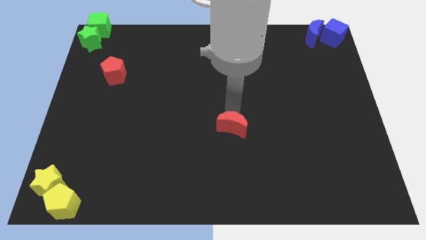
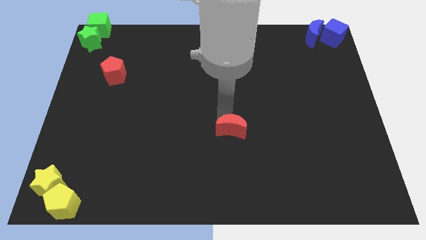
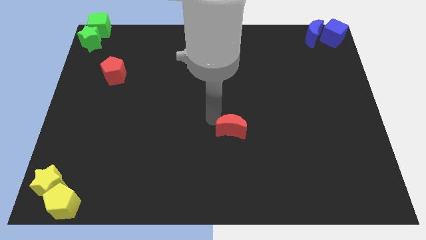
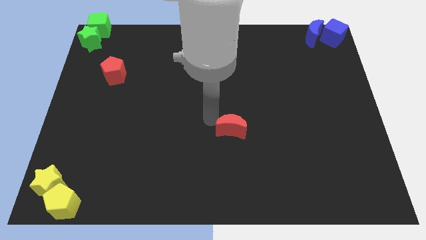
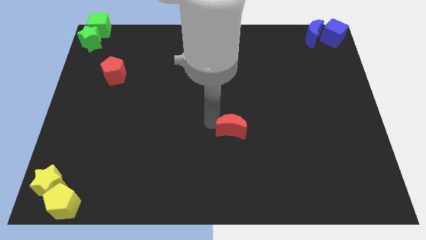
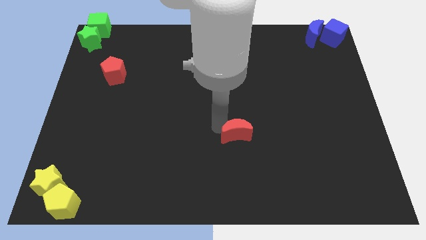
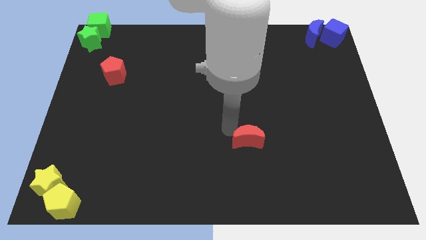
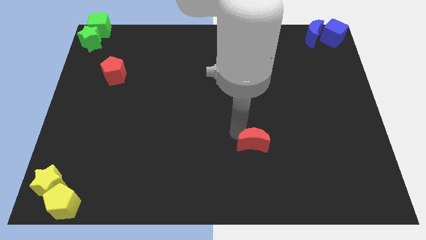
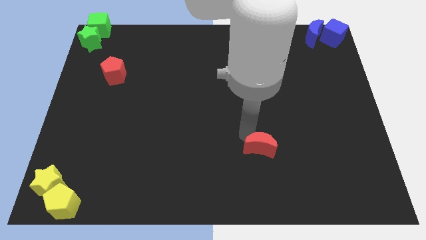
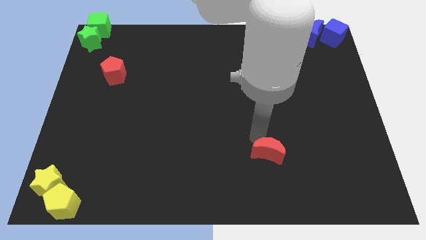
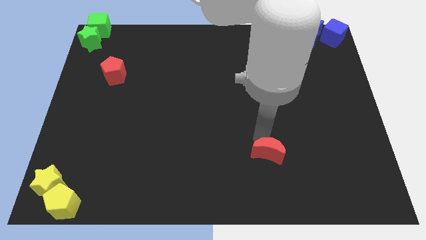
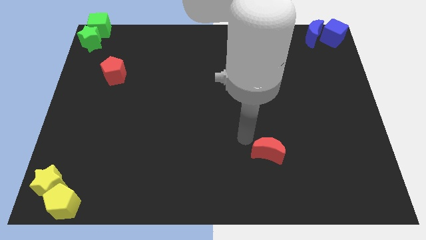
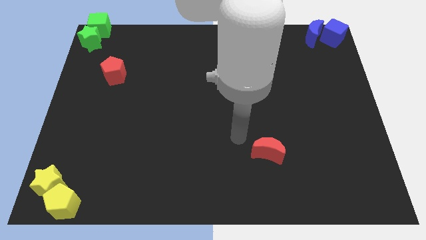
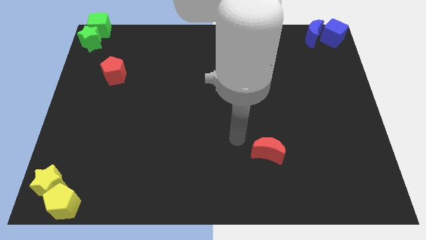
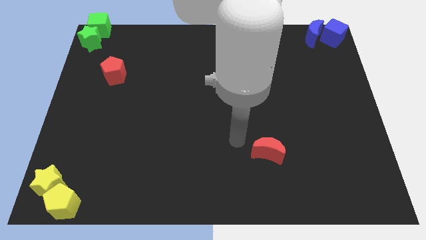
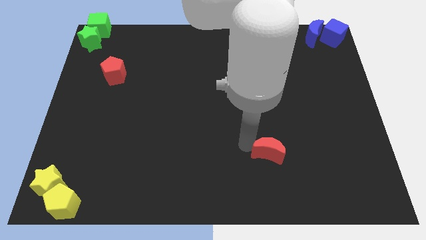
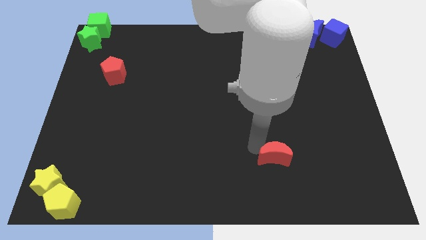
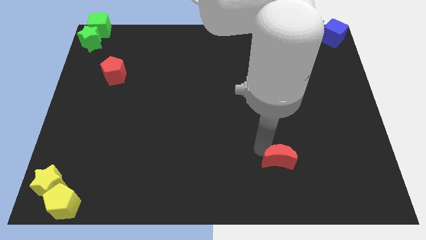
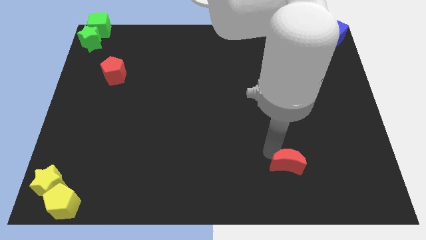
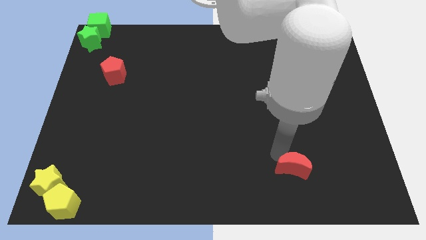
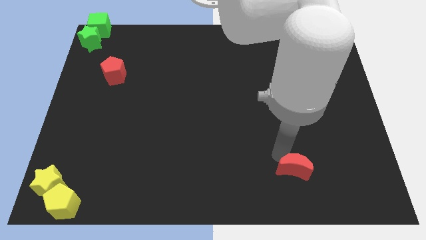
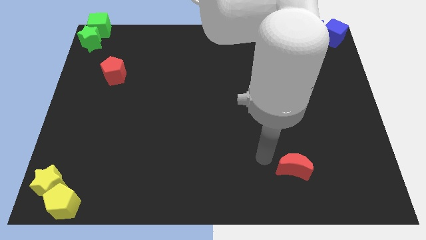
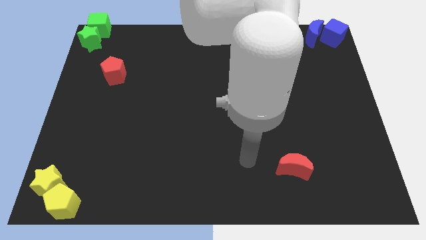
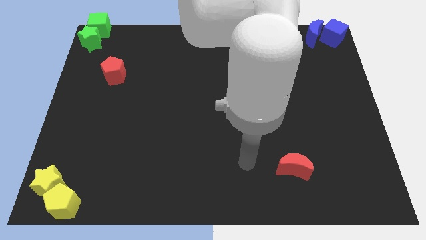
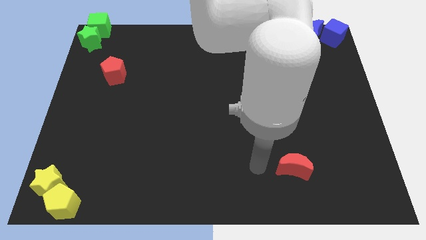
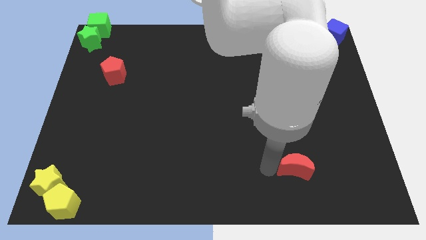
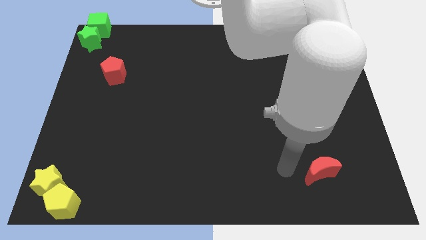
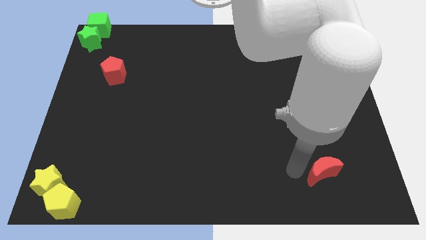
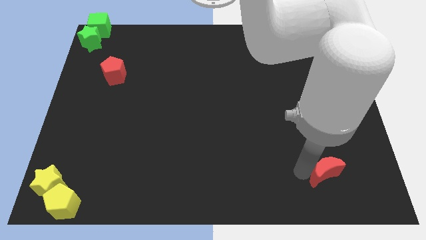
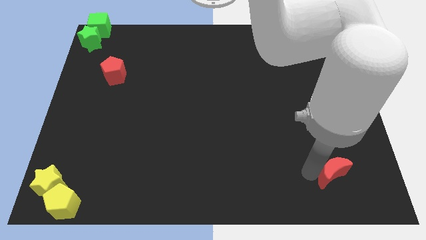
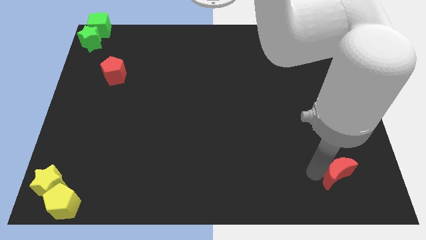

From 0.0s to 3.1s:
push the red crescent towards the bottom right

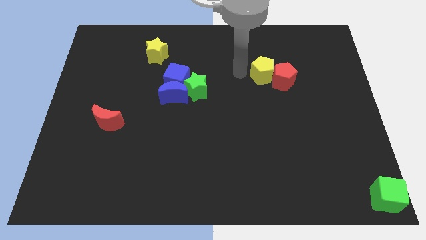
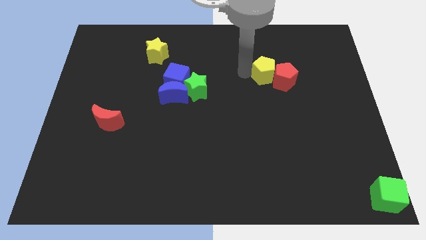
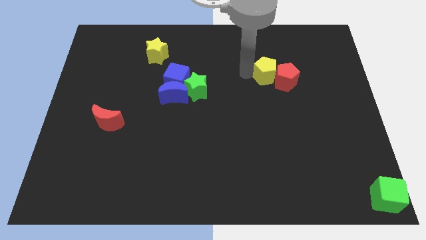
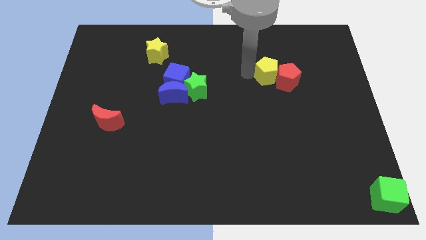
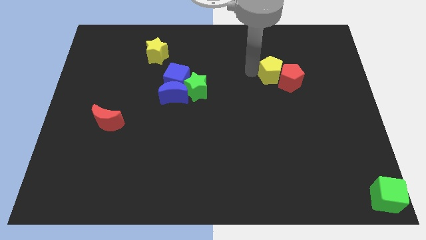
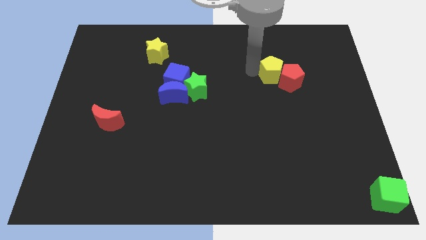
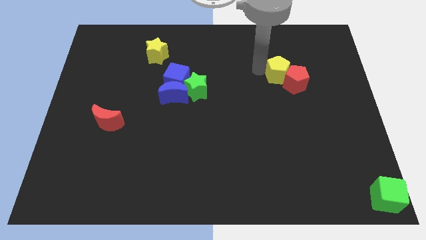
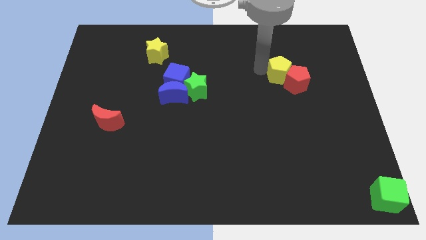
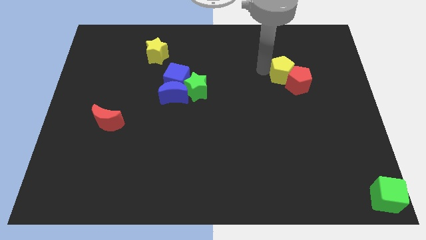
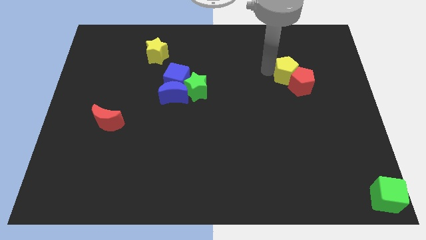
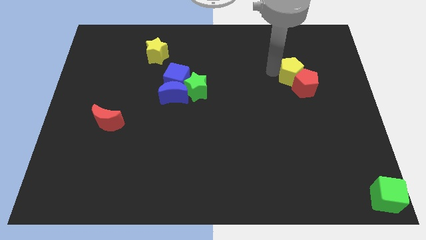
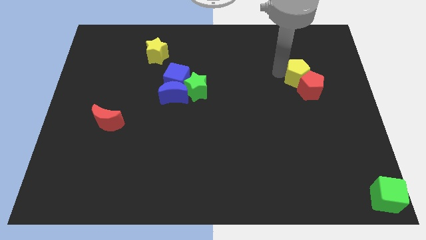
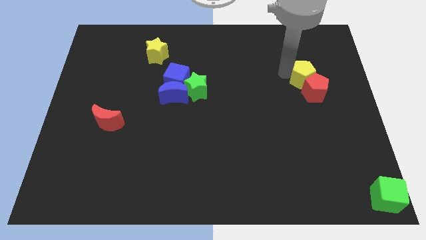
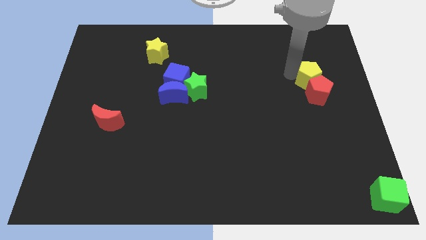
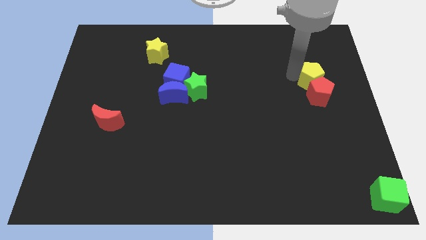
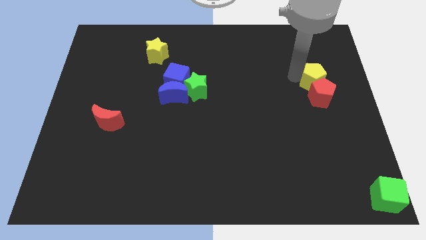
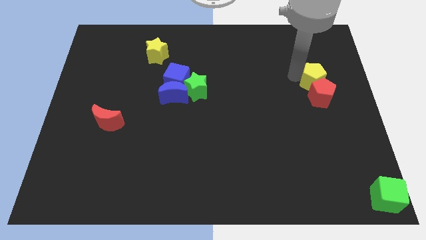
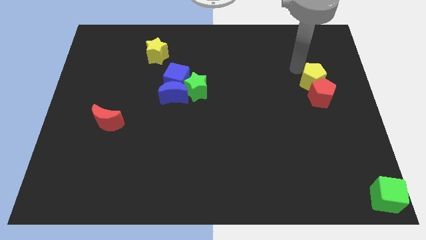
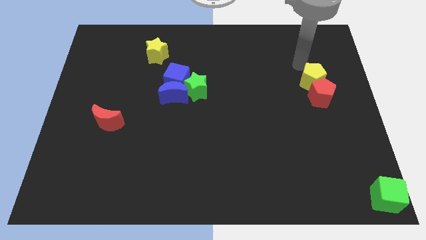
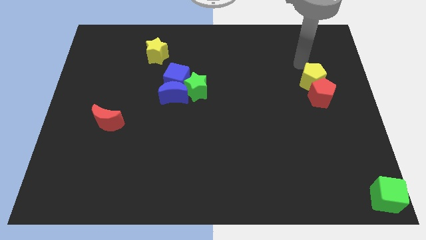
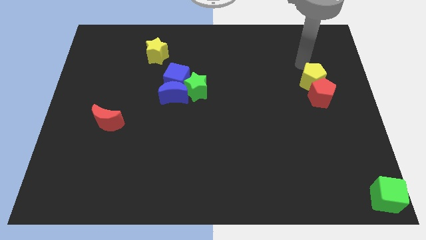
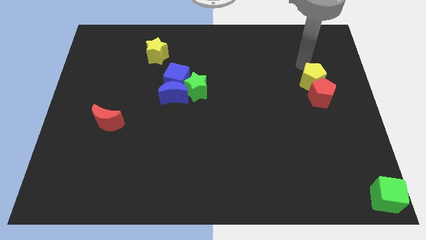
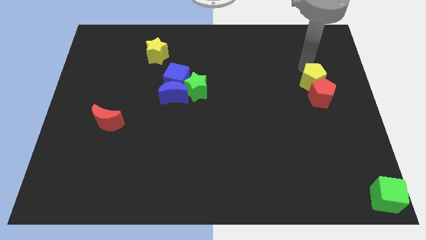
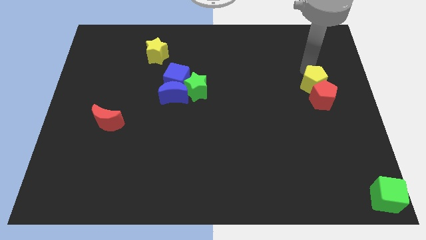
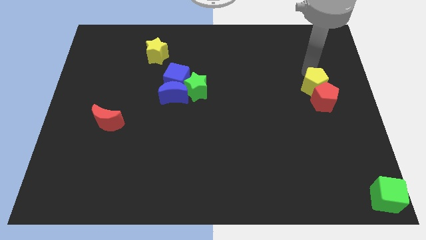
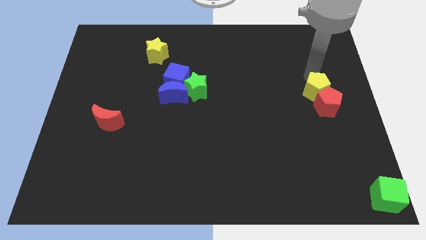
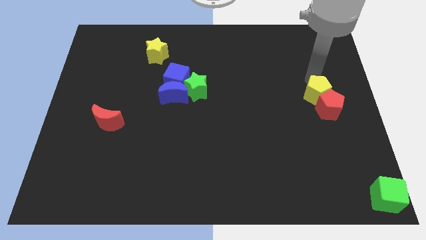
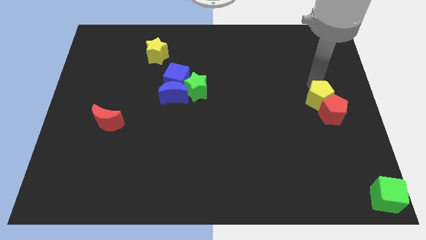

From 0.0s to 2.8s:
move the red pentagon and the yellow pentagon to the center right

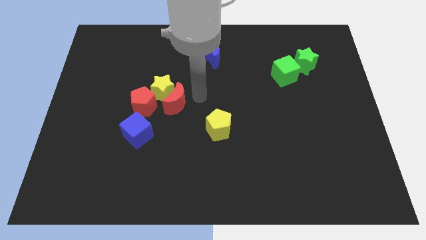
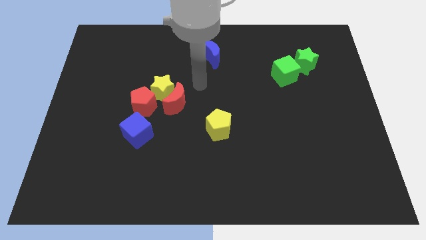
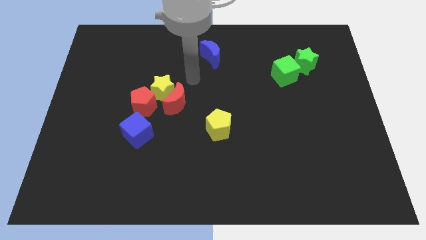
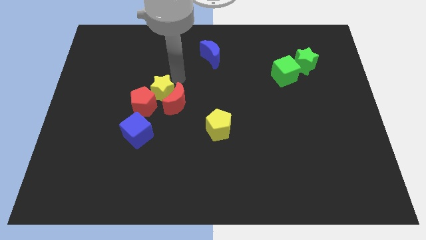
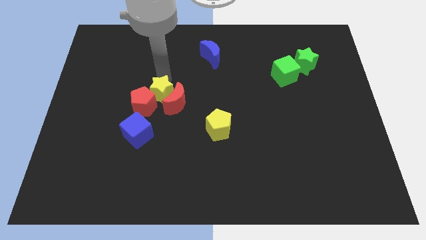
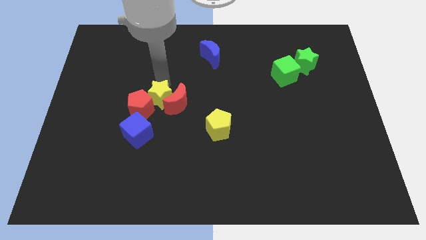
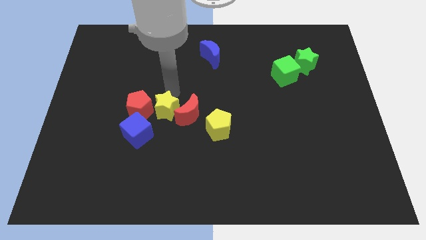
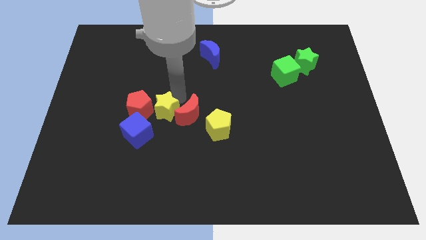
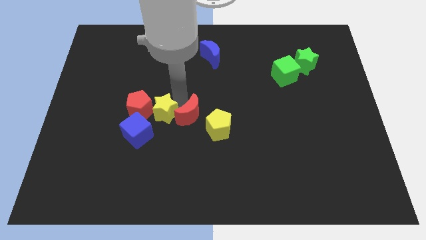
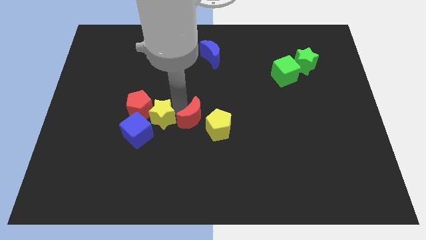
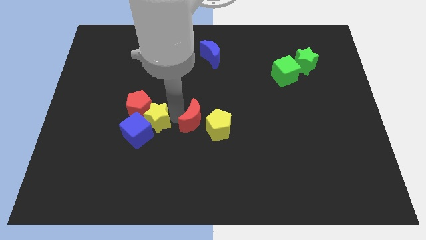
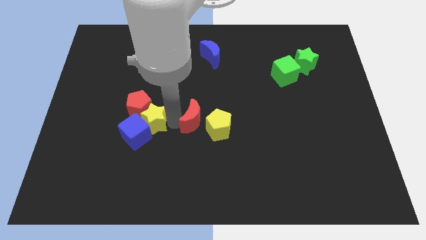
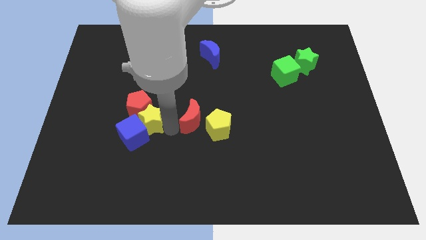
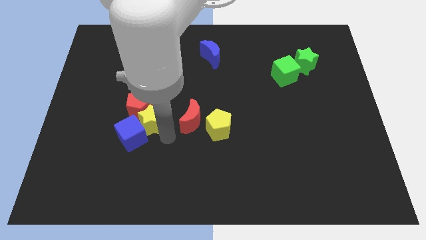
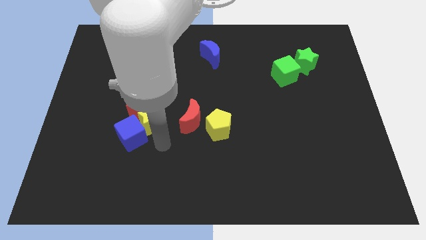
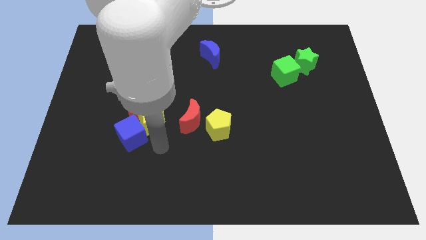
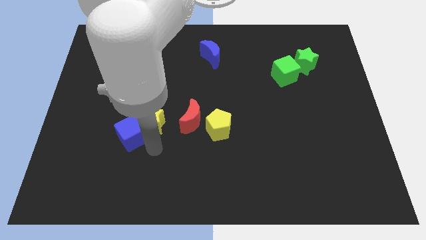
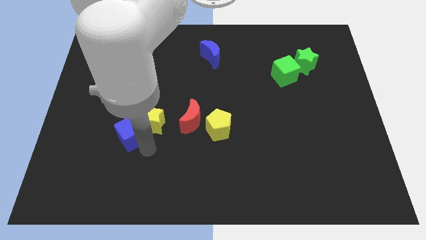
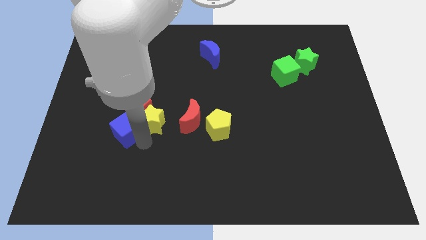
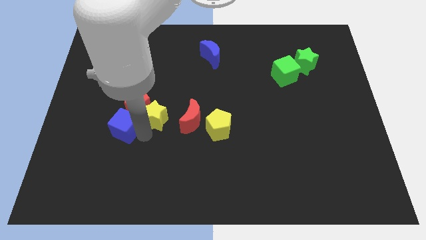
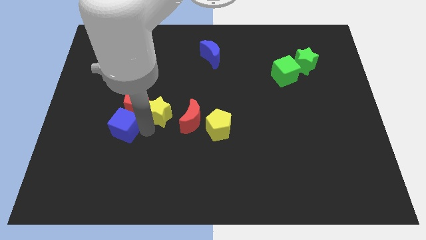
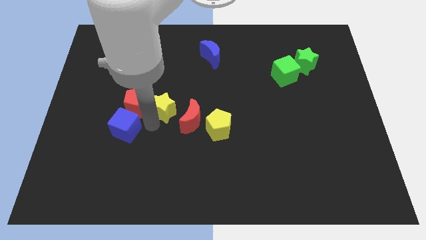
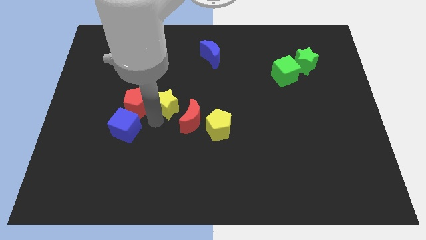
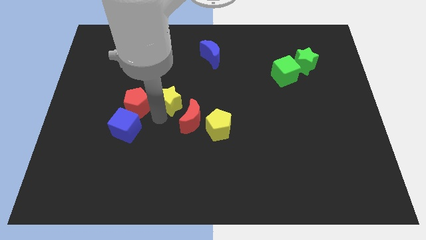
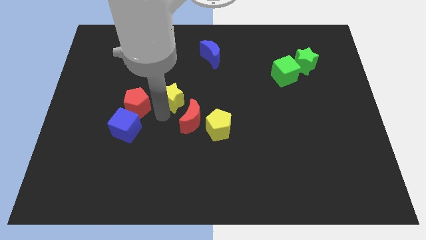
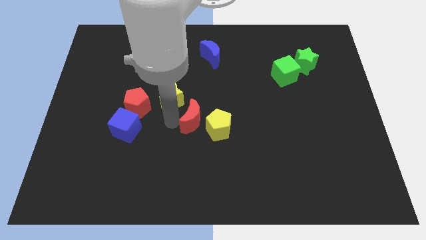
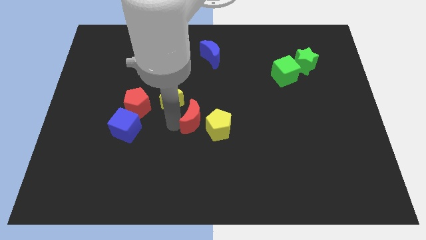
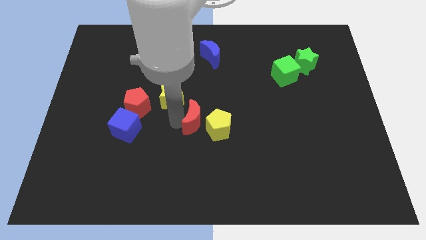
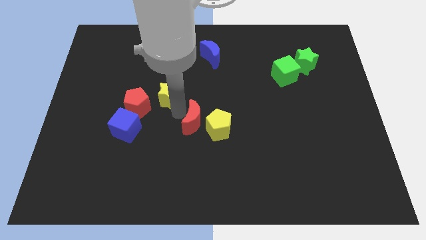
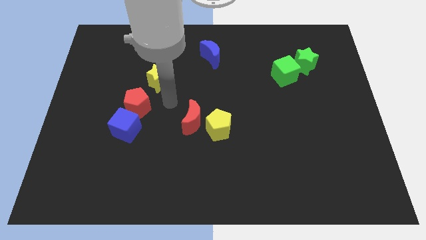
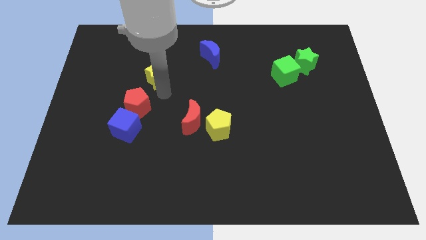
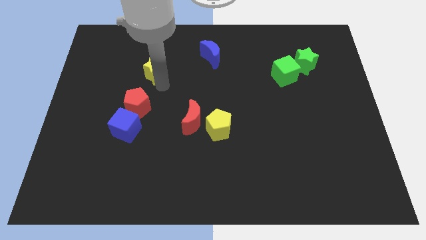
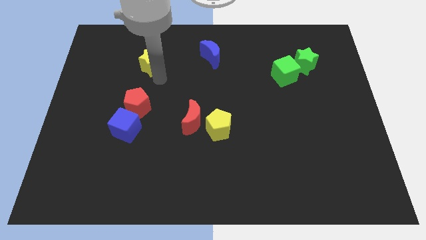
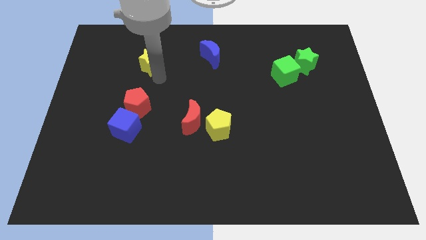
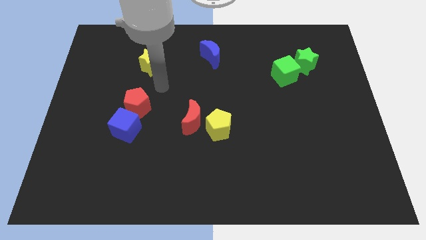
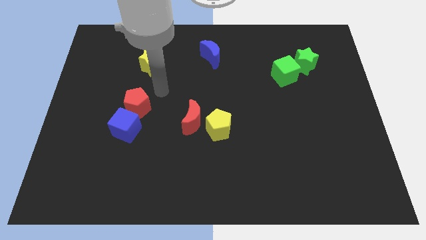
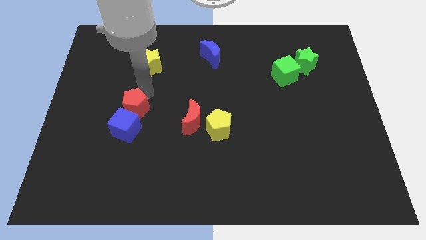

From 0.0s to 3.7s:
move the yellow star away from the red blocks
